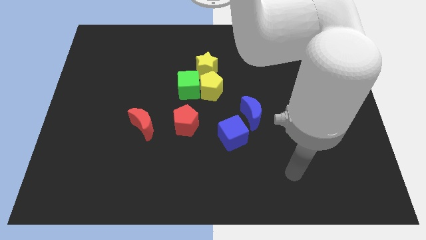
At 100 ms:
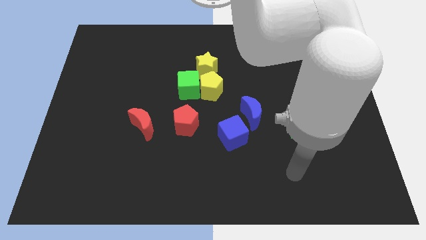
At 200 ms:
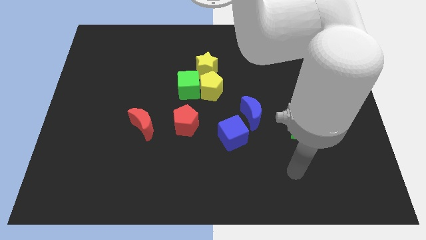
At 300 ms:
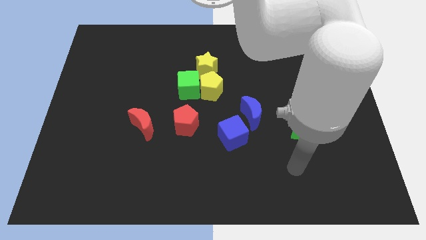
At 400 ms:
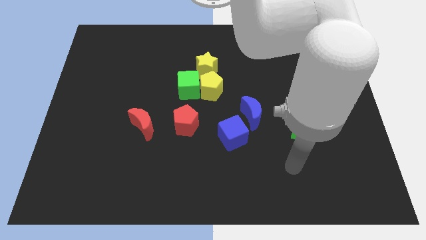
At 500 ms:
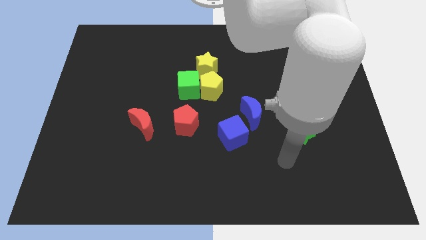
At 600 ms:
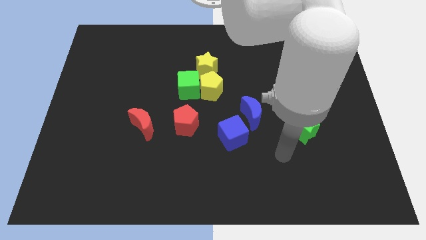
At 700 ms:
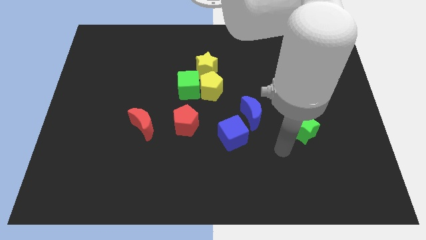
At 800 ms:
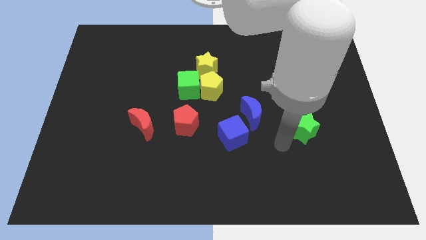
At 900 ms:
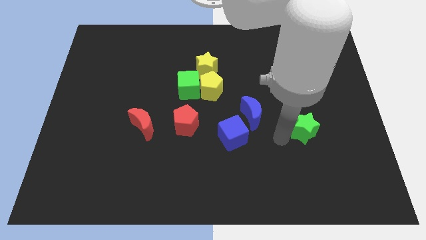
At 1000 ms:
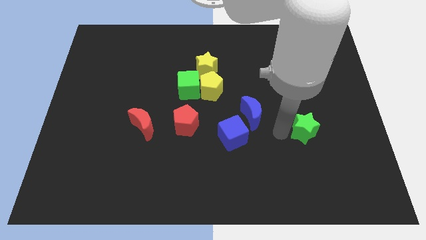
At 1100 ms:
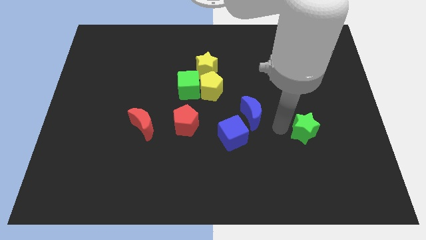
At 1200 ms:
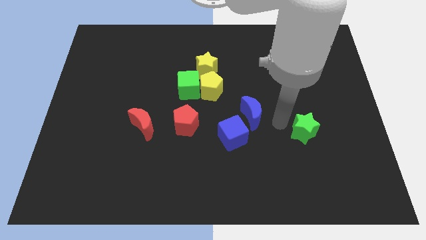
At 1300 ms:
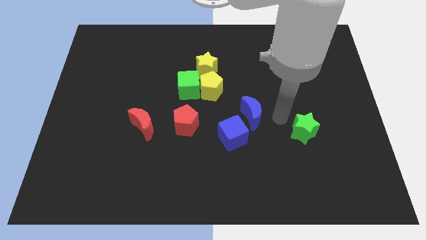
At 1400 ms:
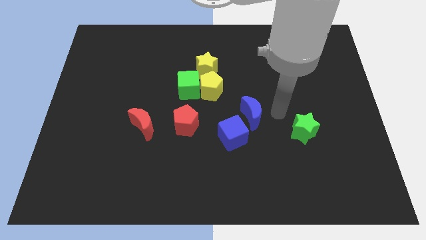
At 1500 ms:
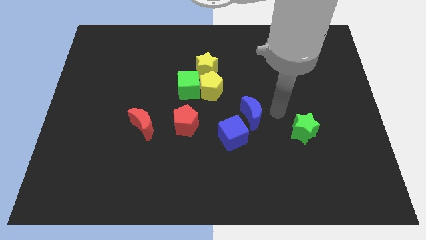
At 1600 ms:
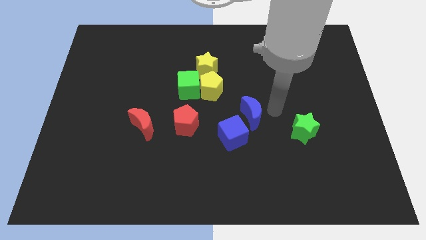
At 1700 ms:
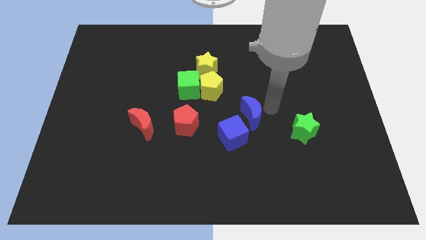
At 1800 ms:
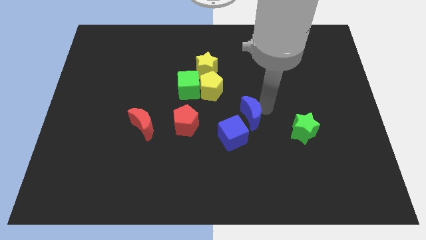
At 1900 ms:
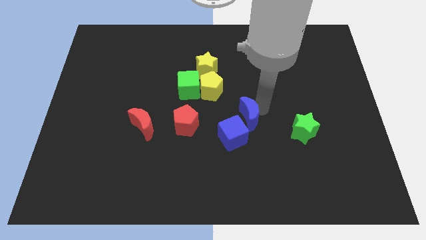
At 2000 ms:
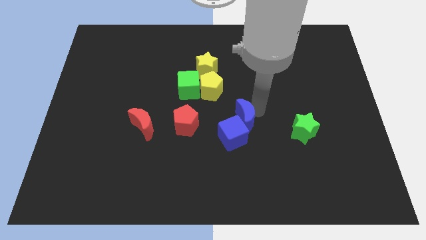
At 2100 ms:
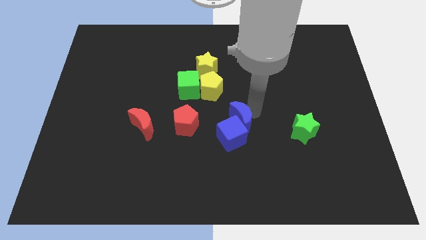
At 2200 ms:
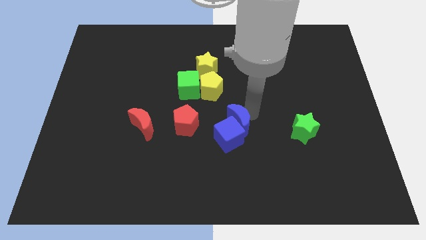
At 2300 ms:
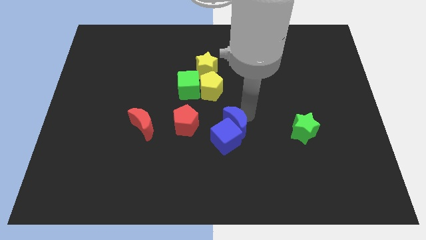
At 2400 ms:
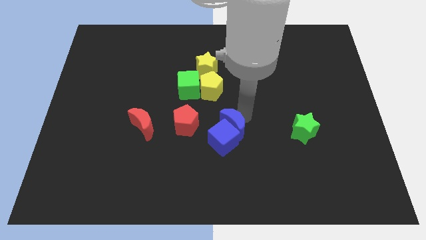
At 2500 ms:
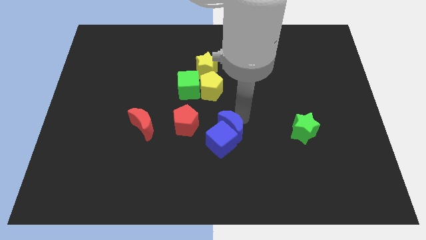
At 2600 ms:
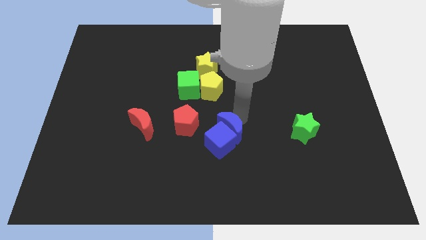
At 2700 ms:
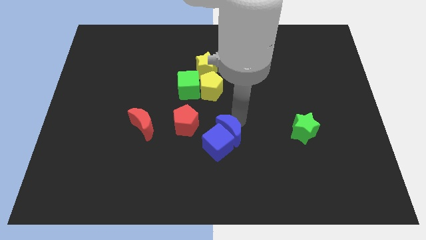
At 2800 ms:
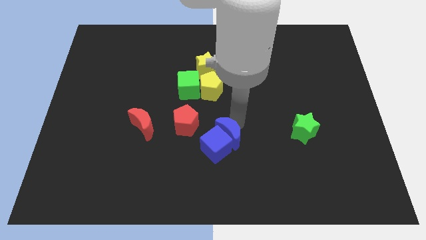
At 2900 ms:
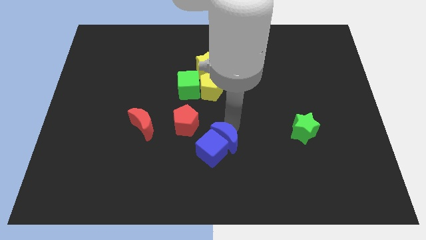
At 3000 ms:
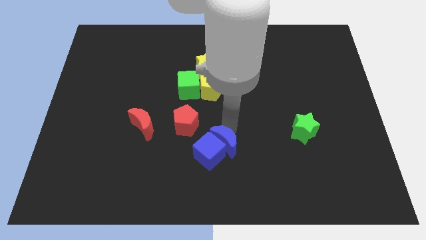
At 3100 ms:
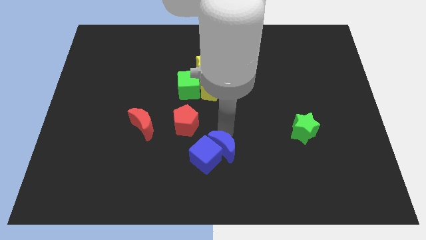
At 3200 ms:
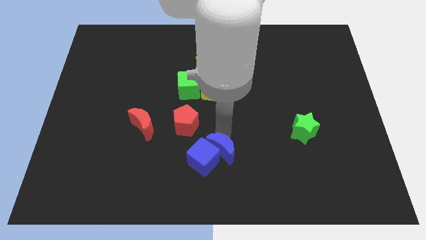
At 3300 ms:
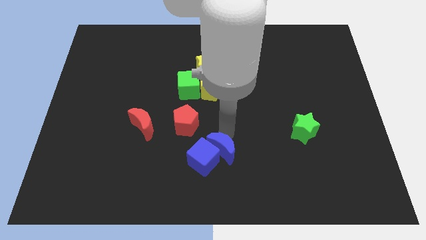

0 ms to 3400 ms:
push the blue crescent into the blue cube

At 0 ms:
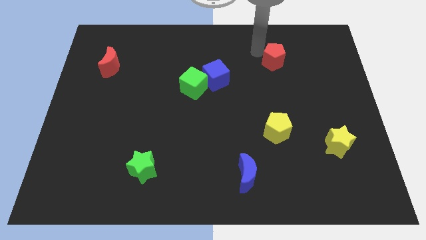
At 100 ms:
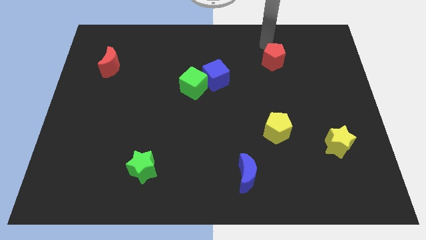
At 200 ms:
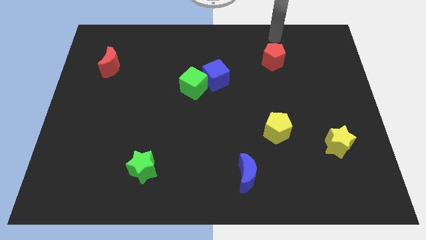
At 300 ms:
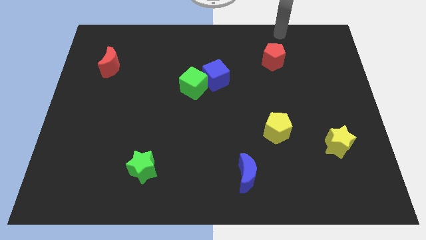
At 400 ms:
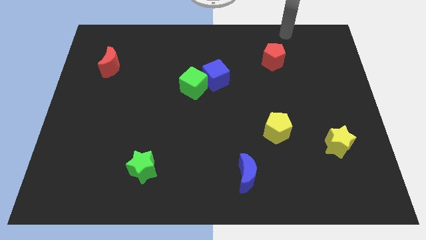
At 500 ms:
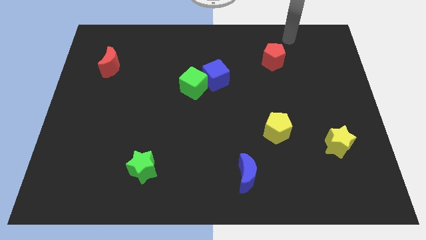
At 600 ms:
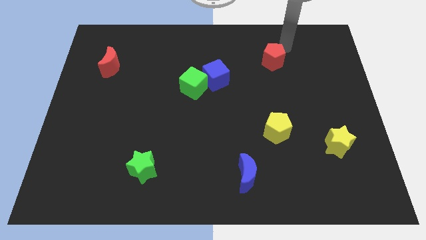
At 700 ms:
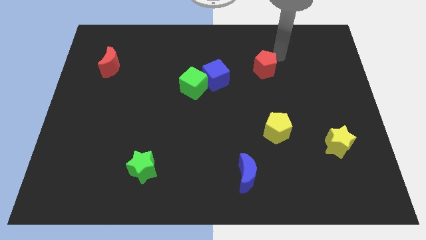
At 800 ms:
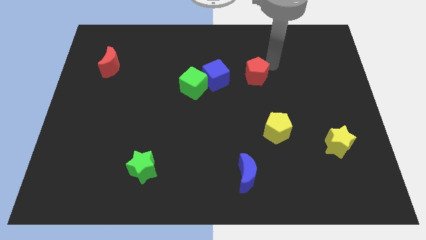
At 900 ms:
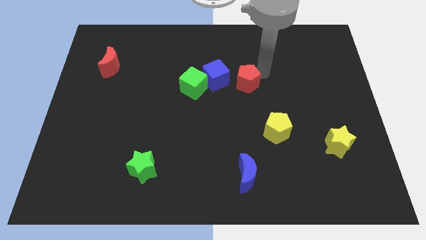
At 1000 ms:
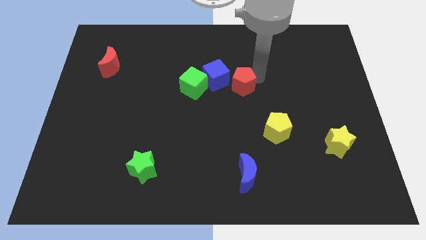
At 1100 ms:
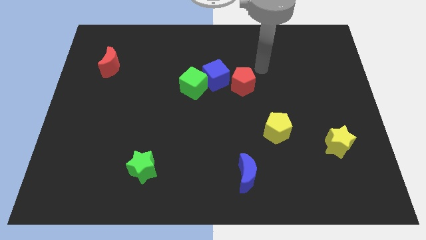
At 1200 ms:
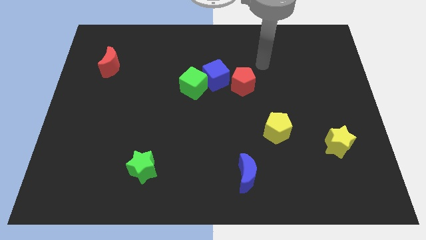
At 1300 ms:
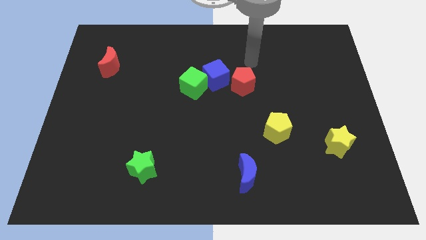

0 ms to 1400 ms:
place the red pentagon near blue cube

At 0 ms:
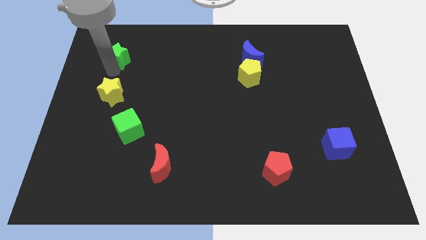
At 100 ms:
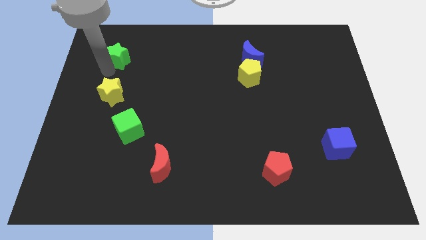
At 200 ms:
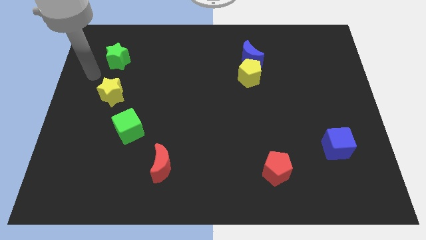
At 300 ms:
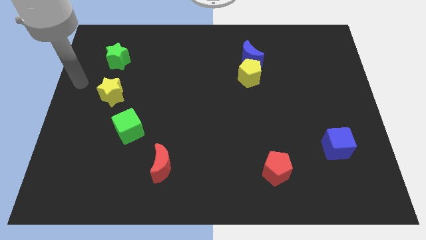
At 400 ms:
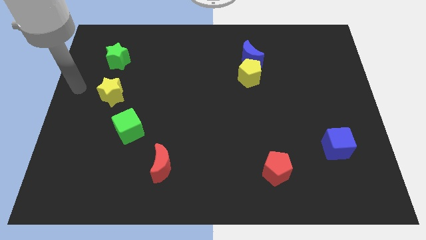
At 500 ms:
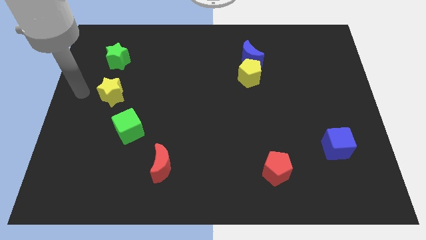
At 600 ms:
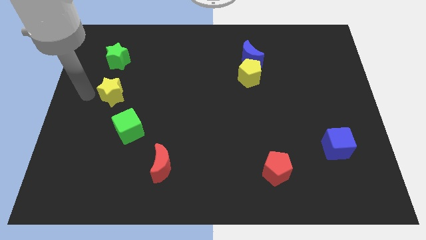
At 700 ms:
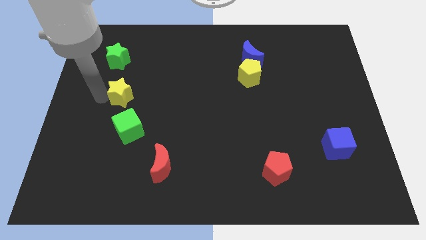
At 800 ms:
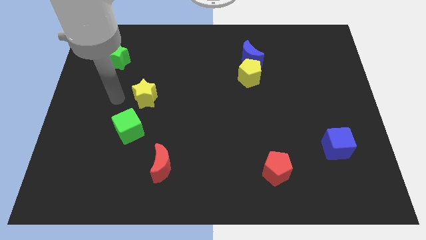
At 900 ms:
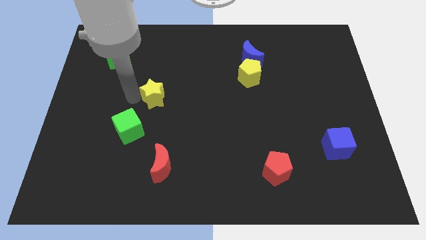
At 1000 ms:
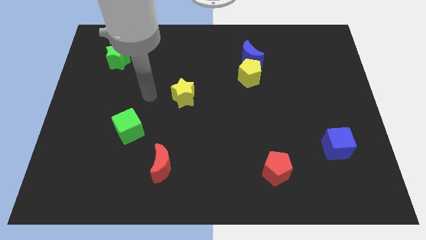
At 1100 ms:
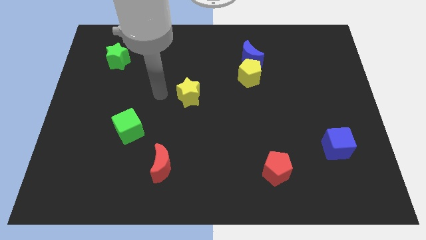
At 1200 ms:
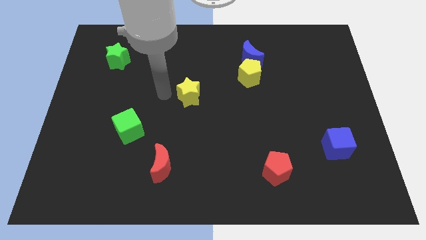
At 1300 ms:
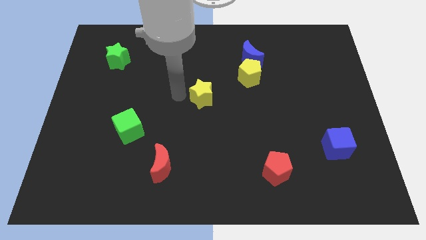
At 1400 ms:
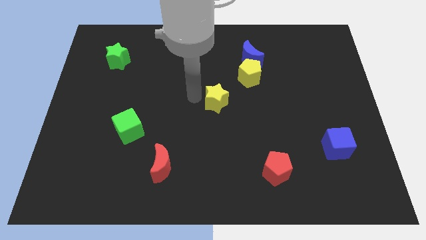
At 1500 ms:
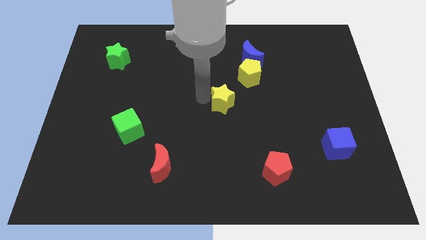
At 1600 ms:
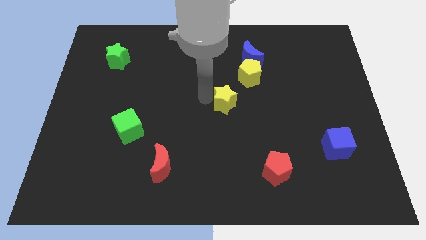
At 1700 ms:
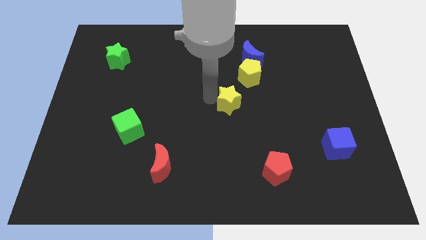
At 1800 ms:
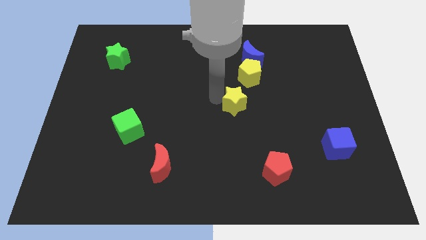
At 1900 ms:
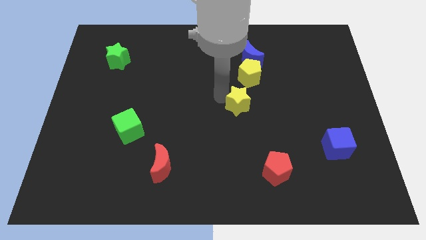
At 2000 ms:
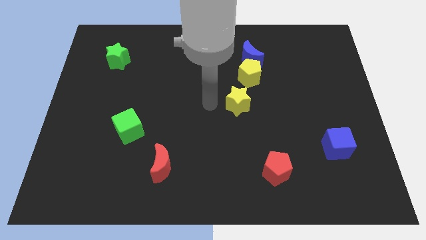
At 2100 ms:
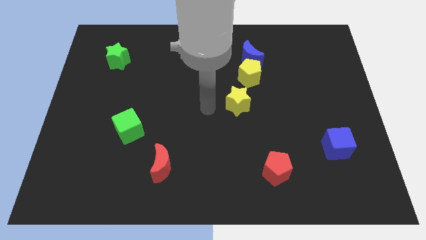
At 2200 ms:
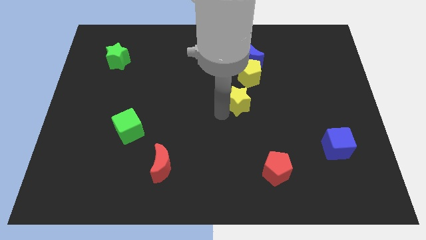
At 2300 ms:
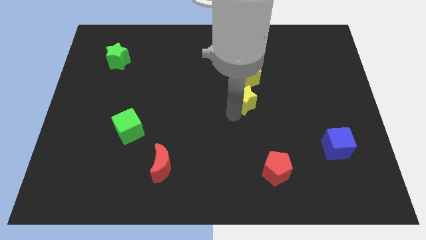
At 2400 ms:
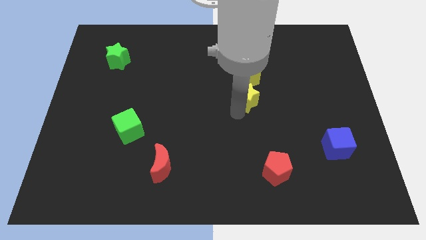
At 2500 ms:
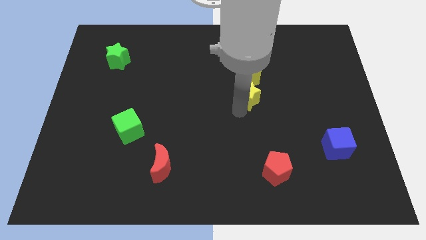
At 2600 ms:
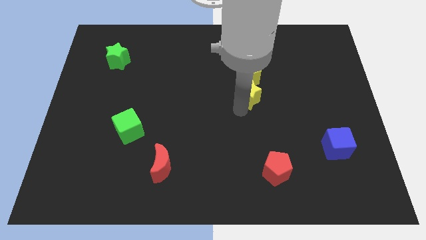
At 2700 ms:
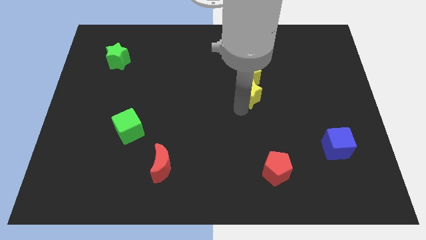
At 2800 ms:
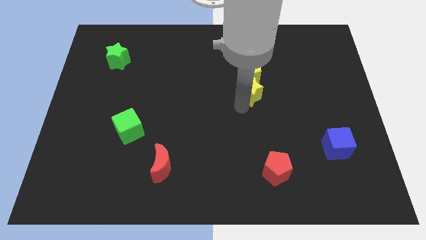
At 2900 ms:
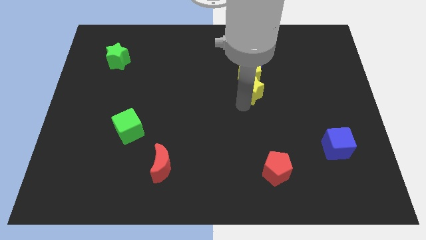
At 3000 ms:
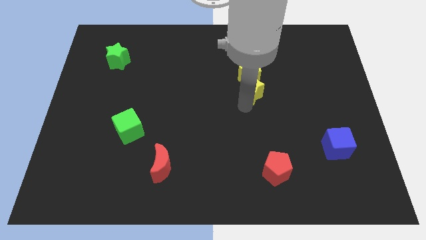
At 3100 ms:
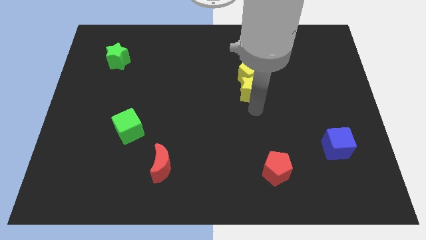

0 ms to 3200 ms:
place yellow star to the bottom of the yellow pentagon

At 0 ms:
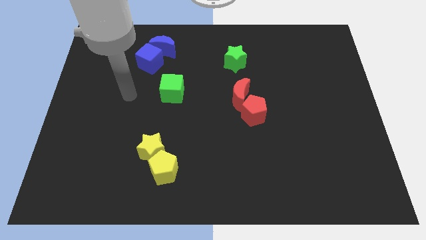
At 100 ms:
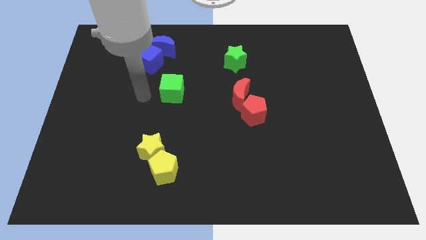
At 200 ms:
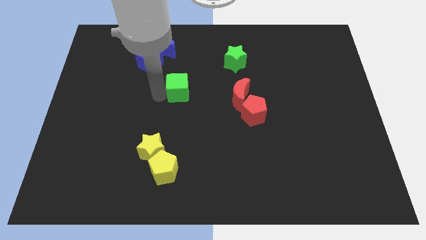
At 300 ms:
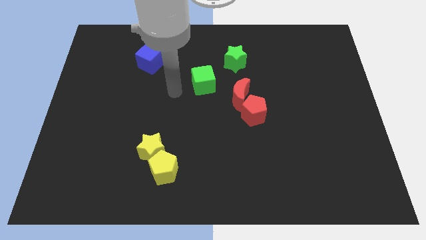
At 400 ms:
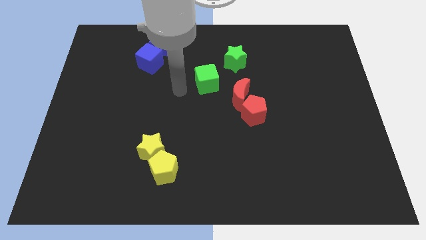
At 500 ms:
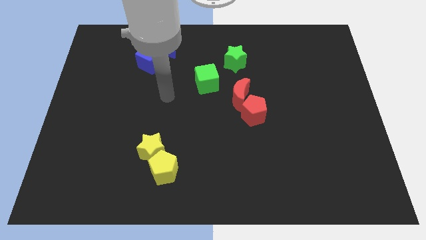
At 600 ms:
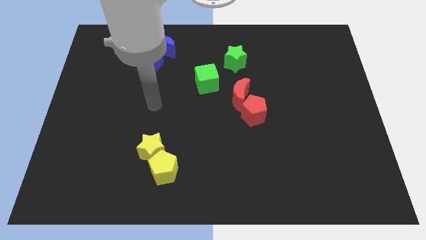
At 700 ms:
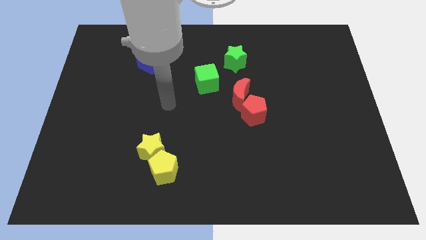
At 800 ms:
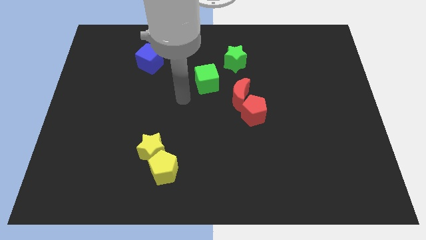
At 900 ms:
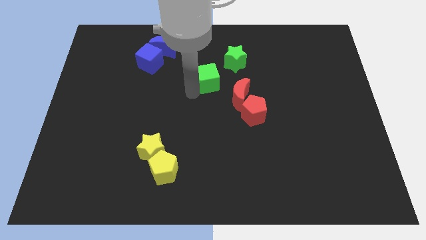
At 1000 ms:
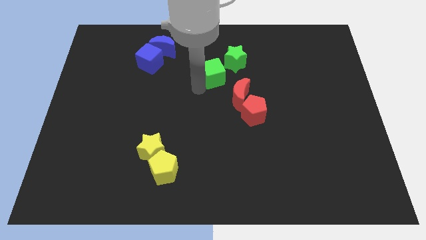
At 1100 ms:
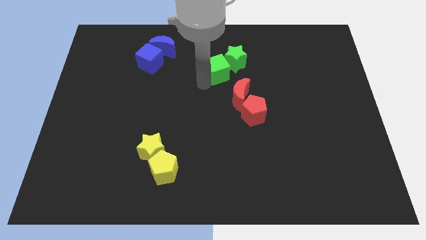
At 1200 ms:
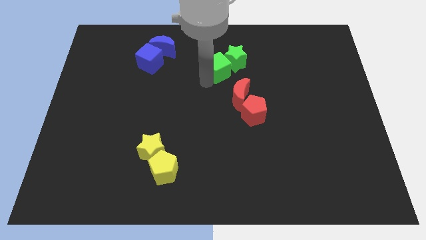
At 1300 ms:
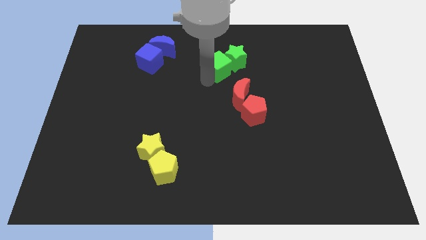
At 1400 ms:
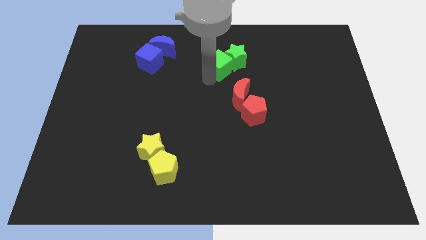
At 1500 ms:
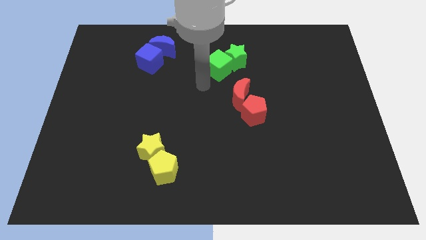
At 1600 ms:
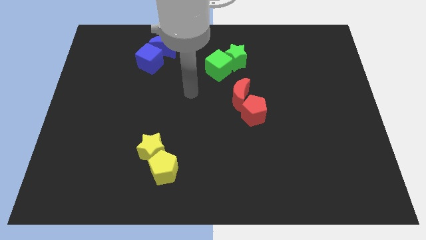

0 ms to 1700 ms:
place the green cube into green star
